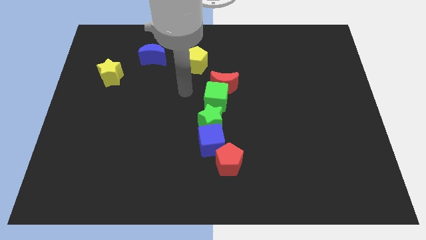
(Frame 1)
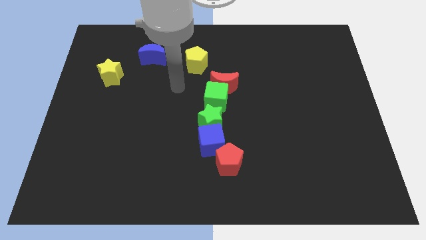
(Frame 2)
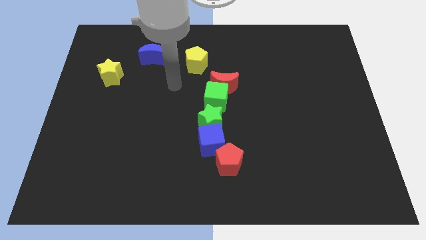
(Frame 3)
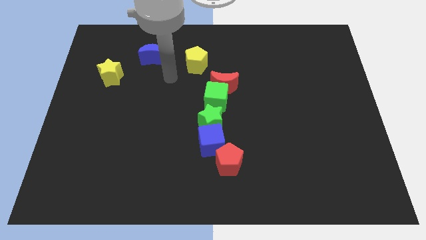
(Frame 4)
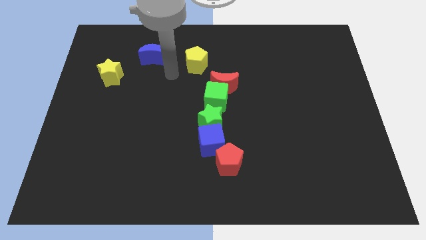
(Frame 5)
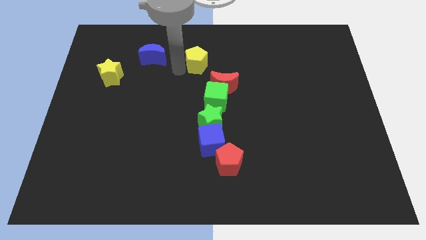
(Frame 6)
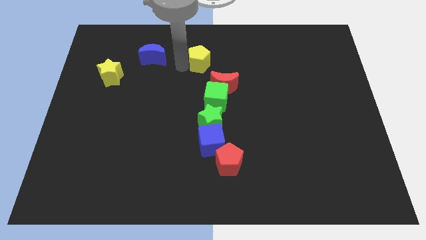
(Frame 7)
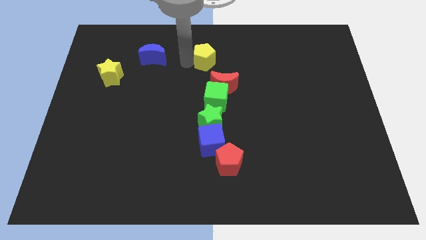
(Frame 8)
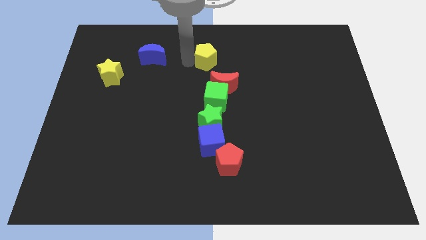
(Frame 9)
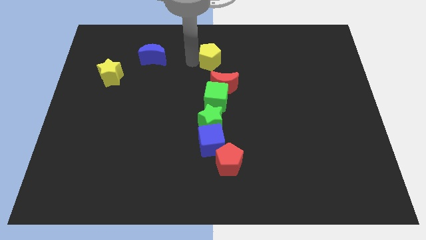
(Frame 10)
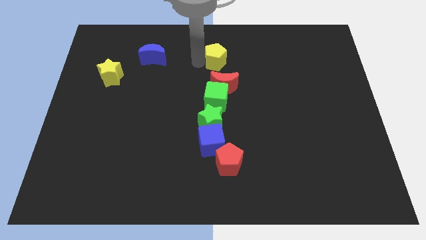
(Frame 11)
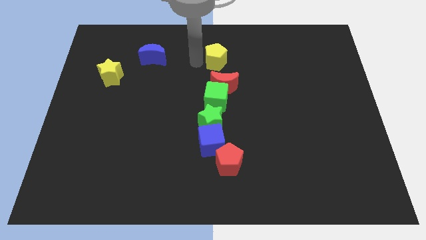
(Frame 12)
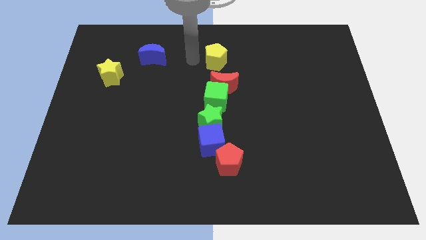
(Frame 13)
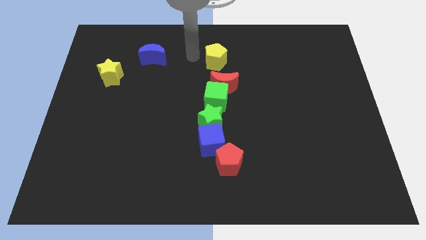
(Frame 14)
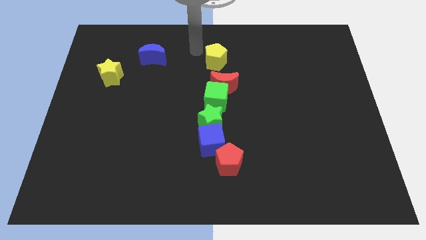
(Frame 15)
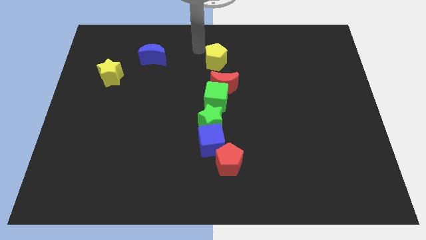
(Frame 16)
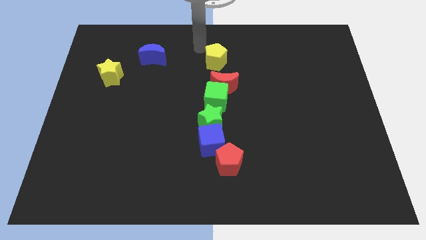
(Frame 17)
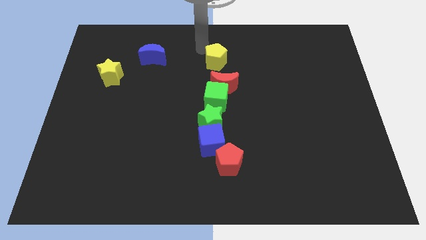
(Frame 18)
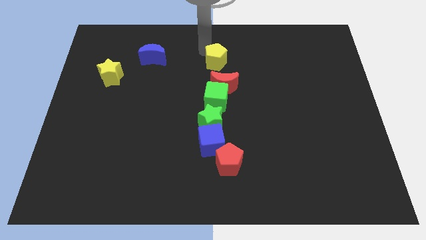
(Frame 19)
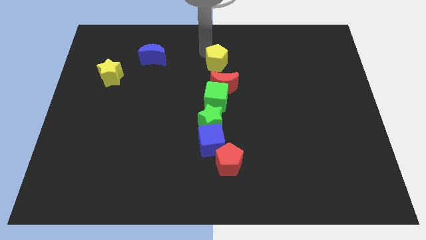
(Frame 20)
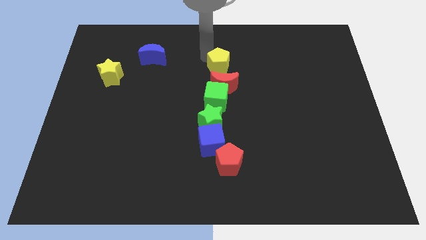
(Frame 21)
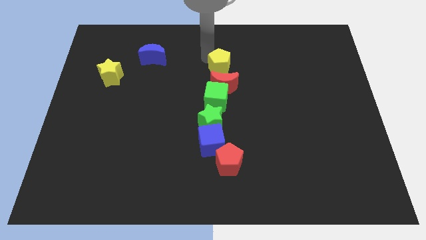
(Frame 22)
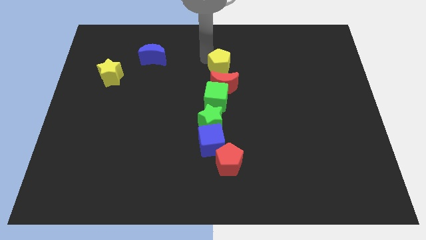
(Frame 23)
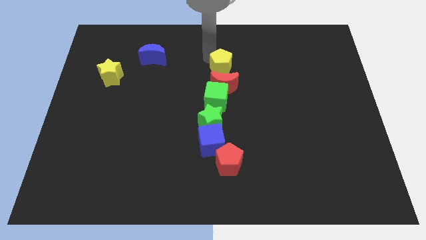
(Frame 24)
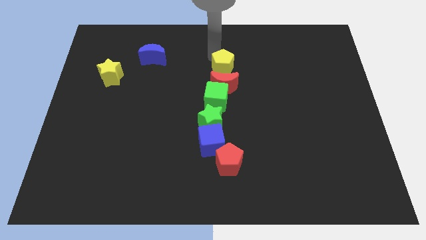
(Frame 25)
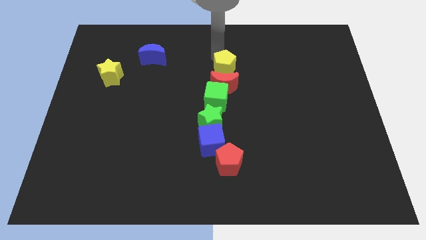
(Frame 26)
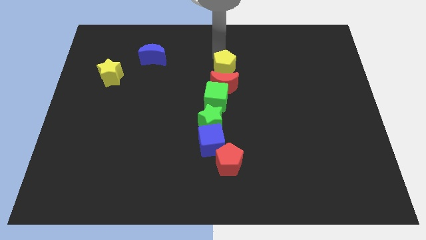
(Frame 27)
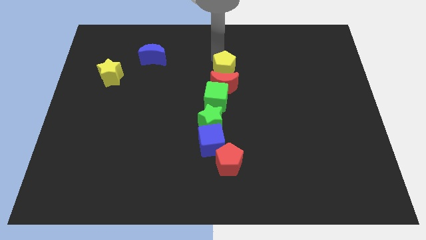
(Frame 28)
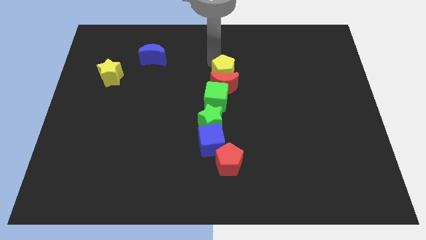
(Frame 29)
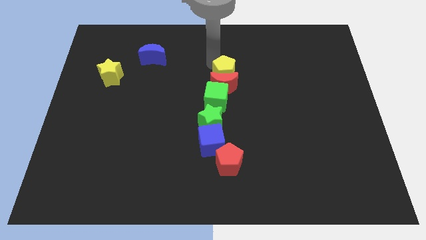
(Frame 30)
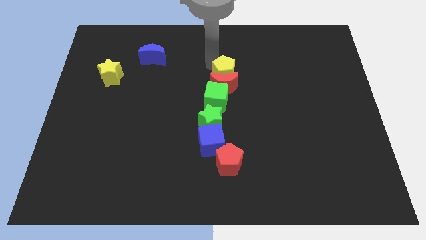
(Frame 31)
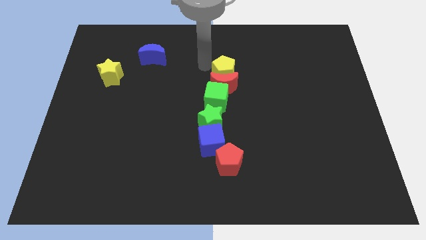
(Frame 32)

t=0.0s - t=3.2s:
push the yellow pentagon to the top of the red crescent

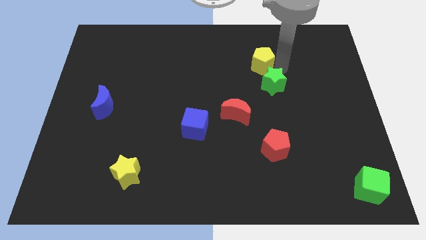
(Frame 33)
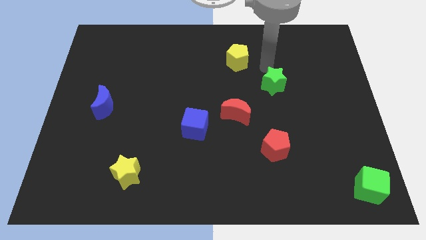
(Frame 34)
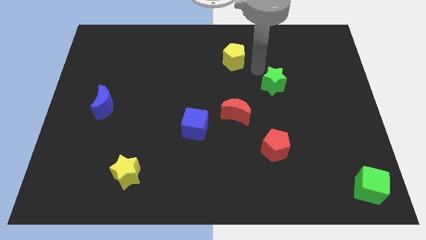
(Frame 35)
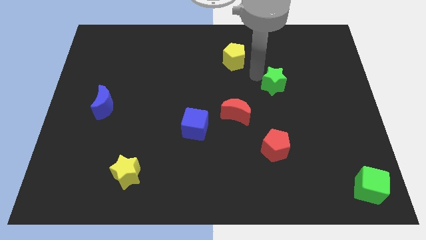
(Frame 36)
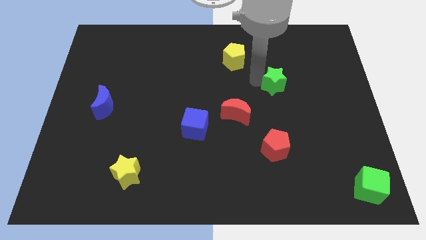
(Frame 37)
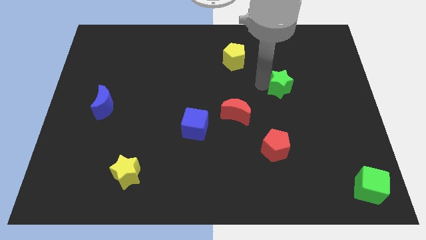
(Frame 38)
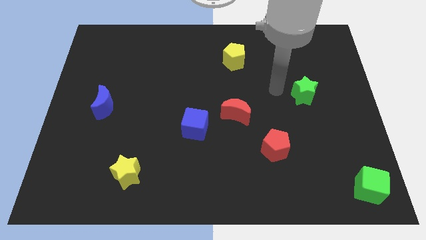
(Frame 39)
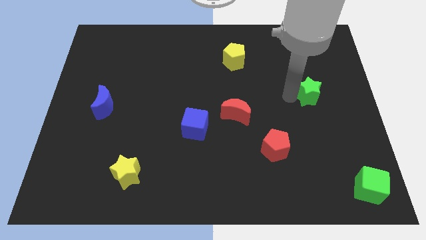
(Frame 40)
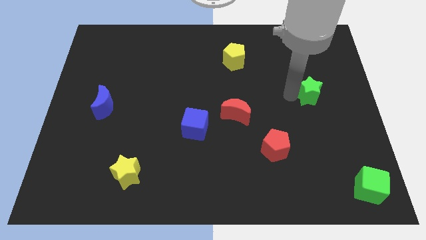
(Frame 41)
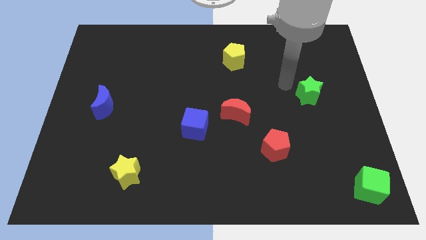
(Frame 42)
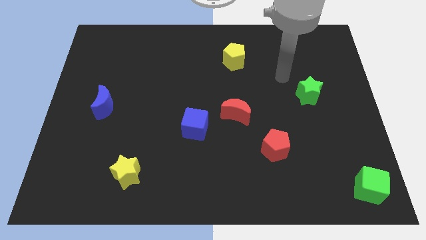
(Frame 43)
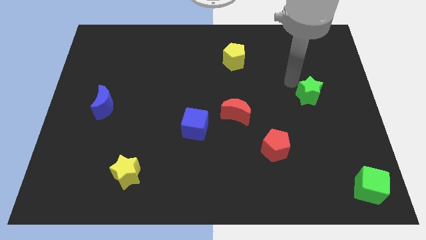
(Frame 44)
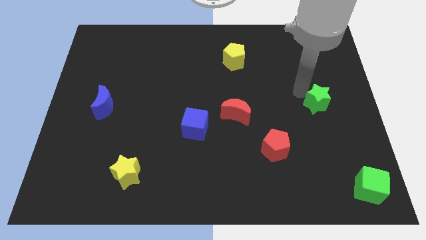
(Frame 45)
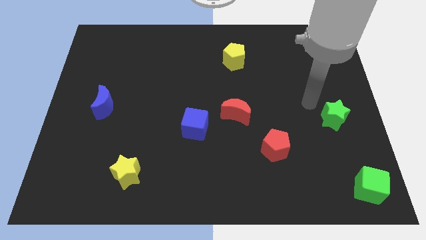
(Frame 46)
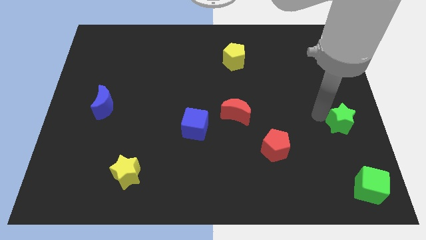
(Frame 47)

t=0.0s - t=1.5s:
move green star towards the green cube

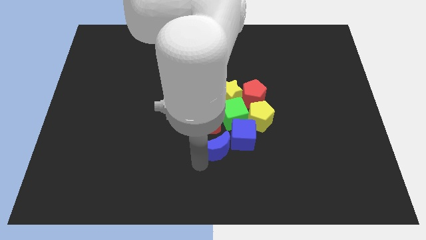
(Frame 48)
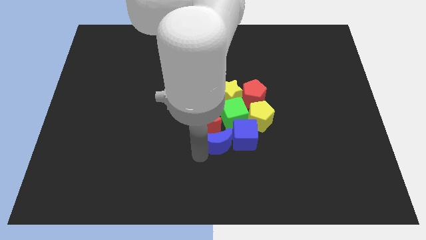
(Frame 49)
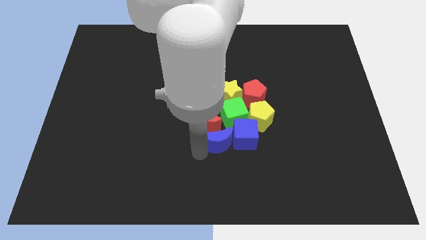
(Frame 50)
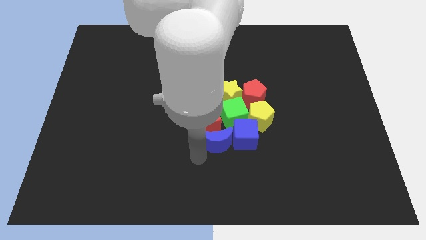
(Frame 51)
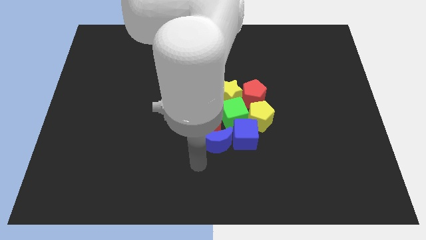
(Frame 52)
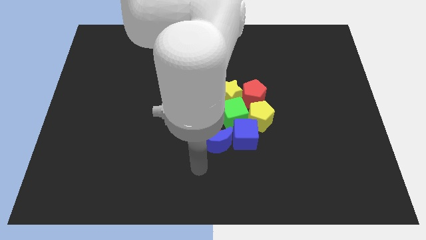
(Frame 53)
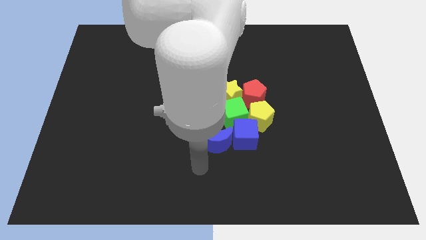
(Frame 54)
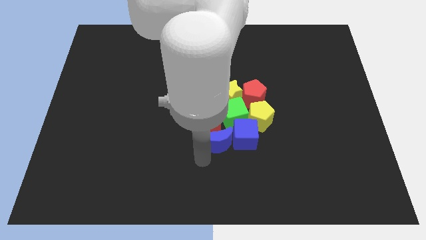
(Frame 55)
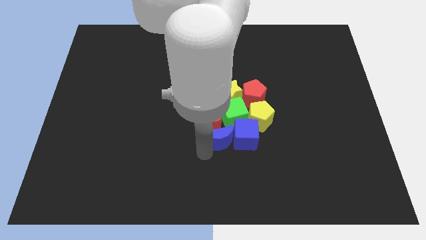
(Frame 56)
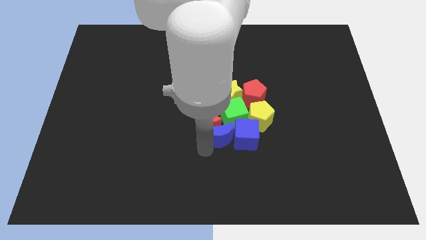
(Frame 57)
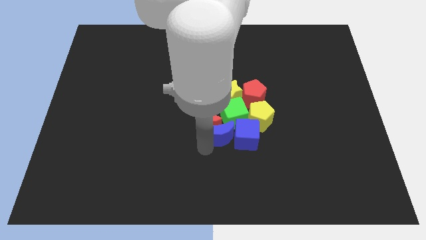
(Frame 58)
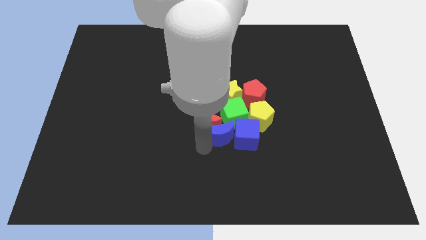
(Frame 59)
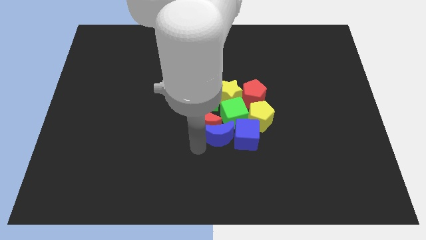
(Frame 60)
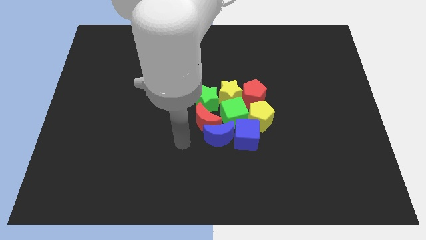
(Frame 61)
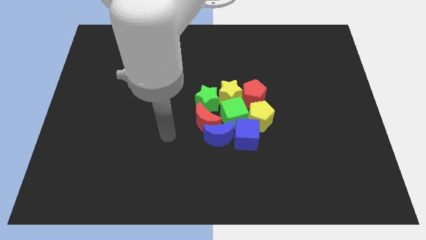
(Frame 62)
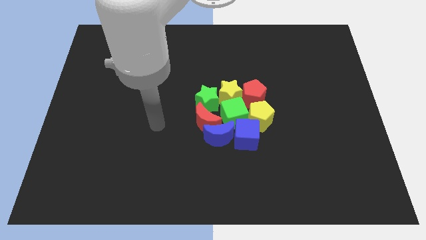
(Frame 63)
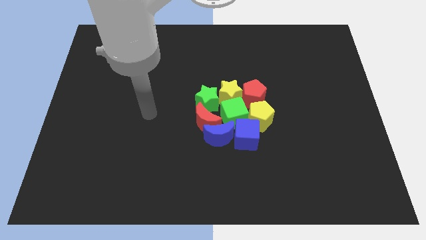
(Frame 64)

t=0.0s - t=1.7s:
move your arm slightly left to the board

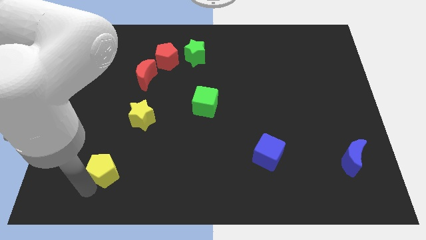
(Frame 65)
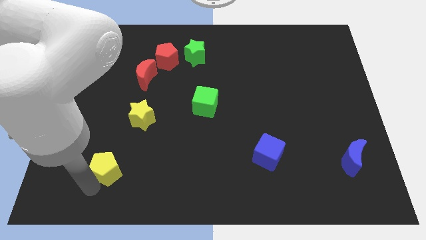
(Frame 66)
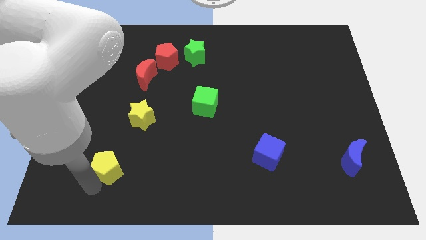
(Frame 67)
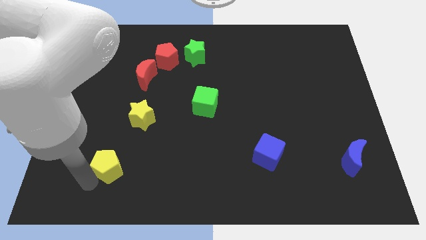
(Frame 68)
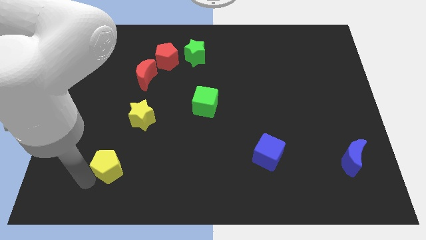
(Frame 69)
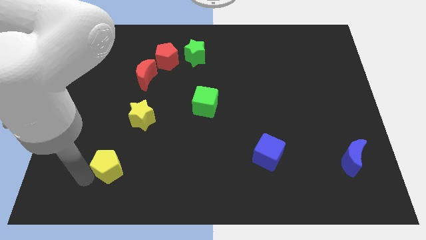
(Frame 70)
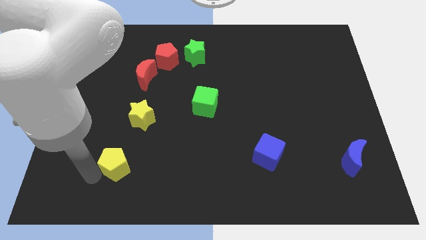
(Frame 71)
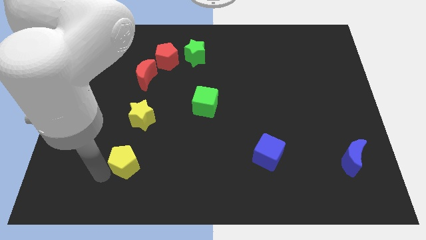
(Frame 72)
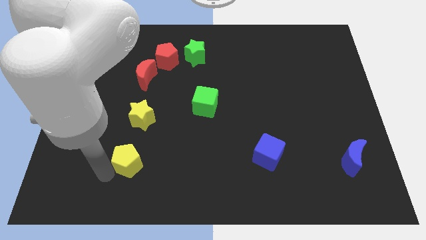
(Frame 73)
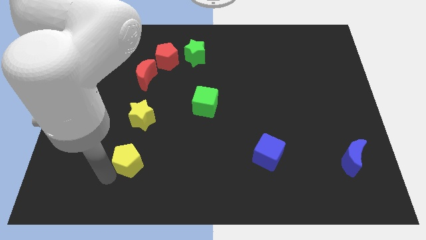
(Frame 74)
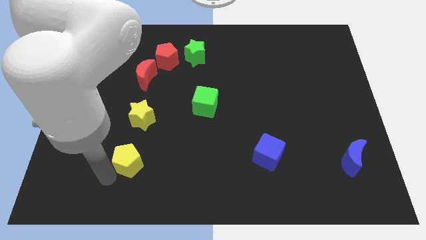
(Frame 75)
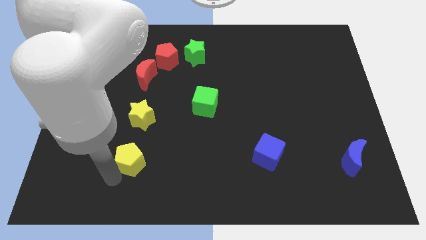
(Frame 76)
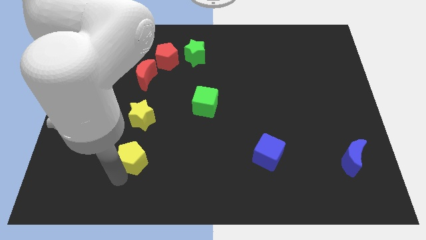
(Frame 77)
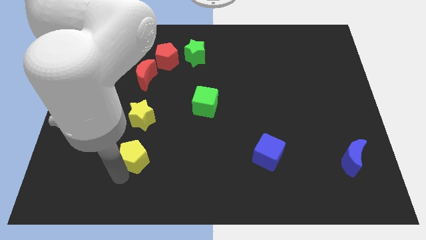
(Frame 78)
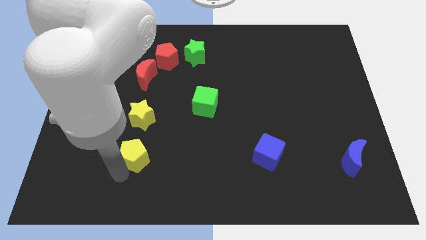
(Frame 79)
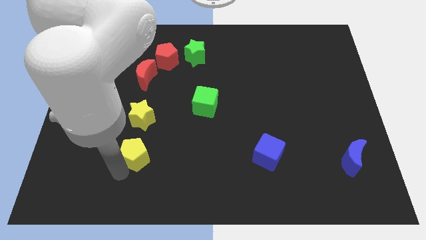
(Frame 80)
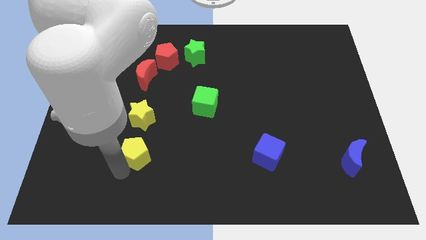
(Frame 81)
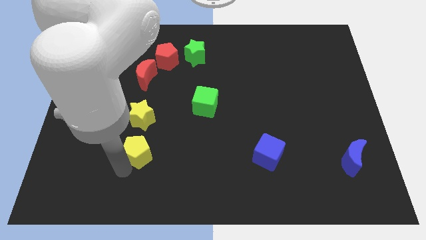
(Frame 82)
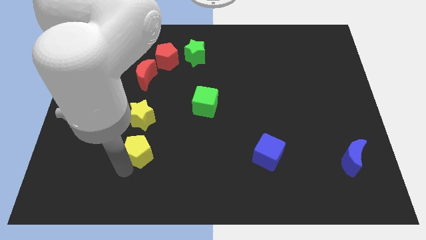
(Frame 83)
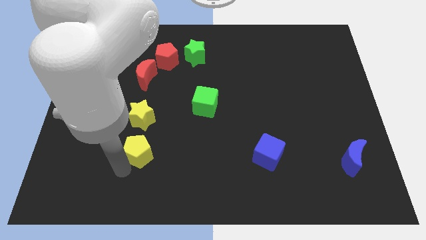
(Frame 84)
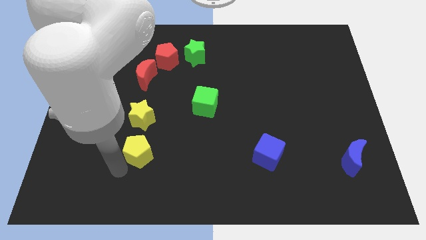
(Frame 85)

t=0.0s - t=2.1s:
move the yellow pentagon below the yellow star

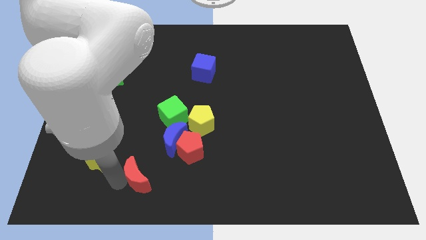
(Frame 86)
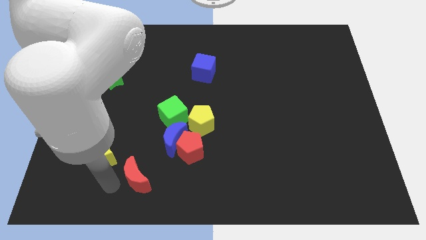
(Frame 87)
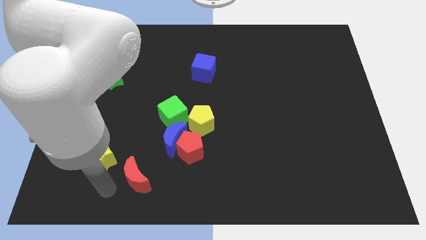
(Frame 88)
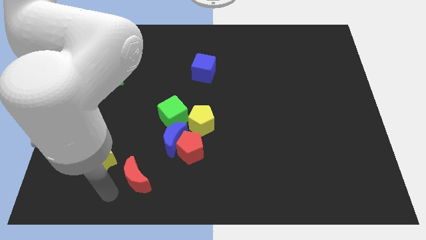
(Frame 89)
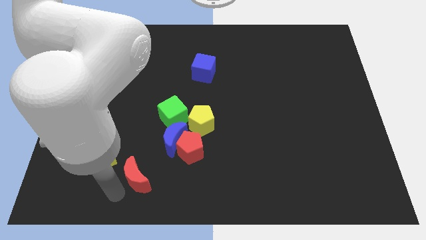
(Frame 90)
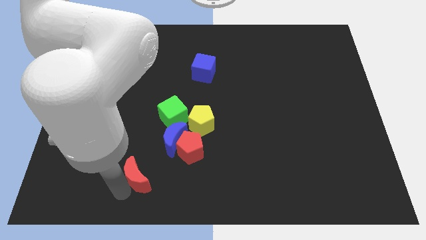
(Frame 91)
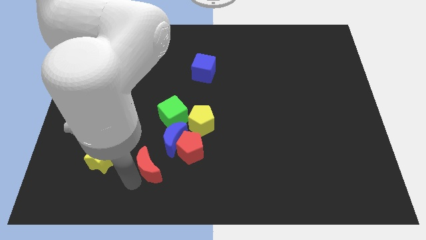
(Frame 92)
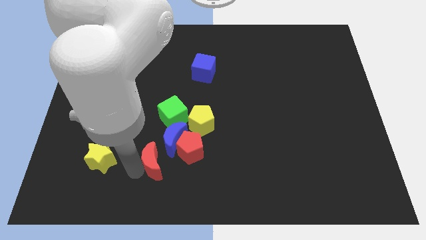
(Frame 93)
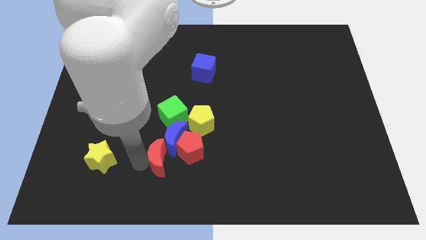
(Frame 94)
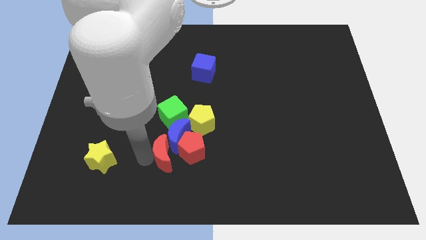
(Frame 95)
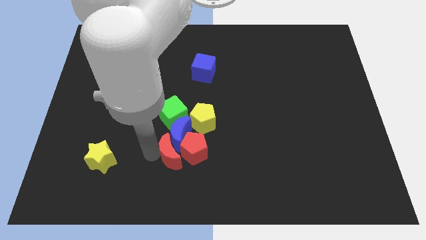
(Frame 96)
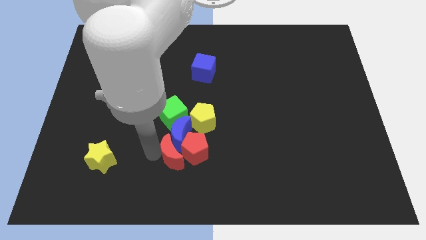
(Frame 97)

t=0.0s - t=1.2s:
push the red crescent into the blue crescent
